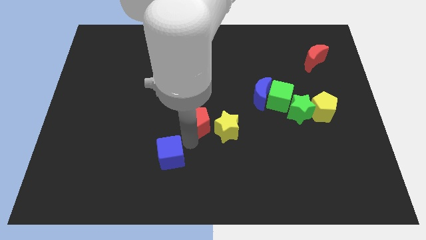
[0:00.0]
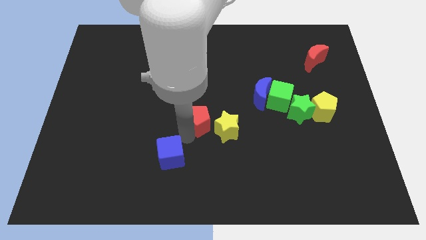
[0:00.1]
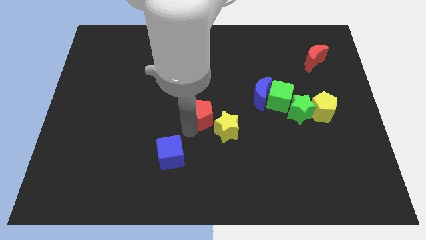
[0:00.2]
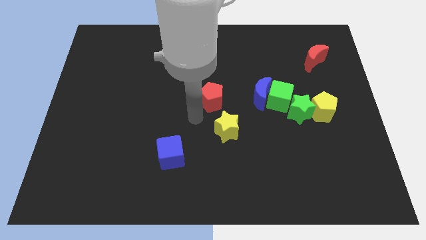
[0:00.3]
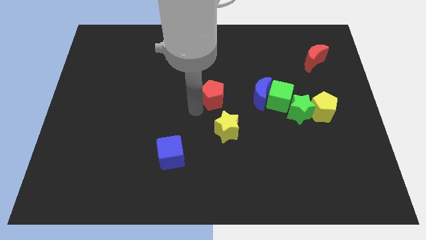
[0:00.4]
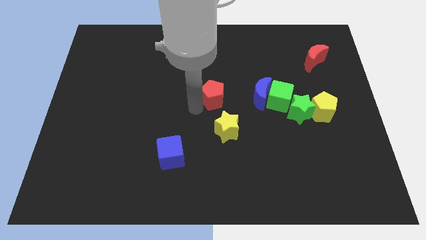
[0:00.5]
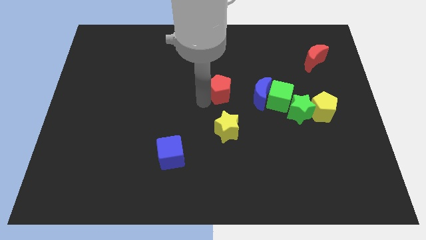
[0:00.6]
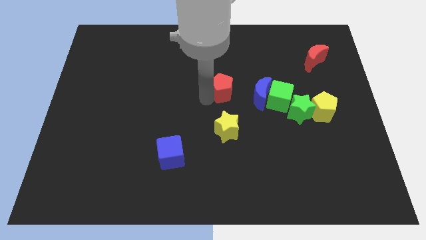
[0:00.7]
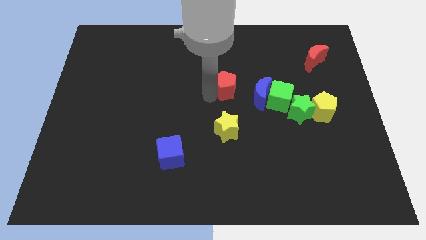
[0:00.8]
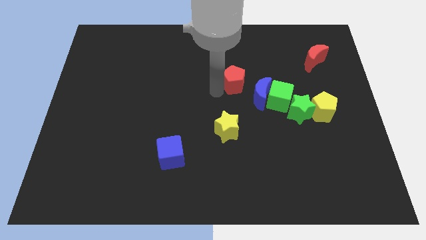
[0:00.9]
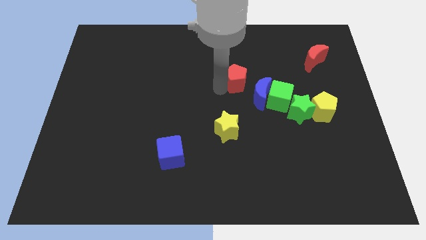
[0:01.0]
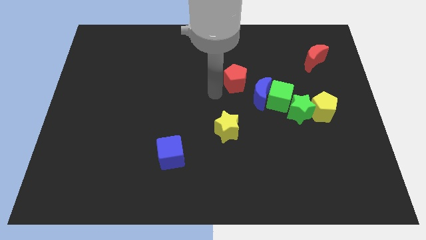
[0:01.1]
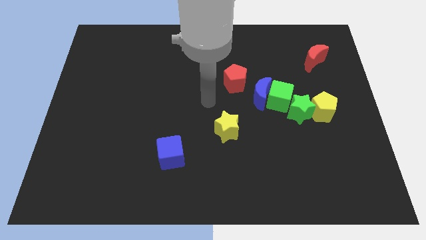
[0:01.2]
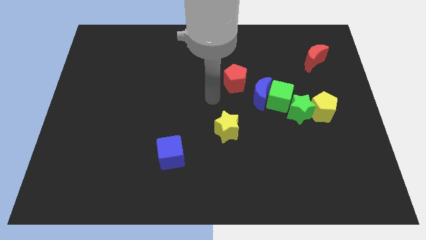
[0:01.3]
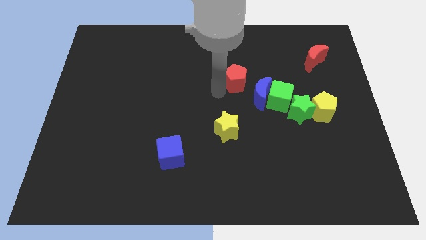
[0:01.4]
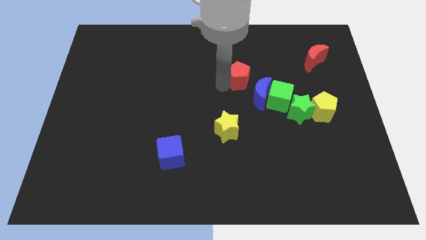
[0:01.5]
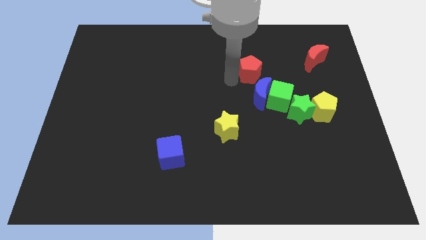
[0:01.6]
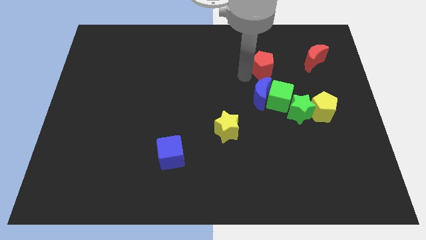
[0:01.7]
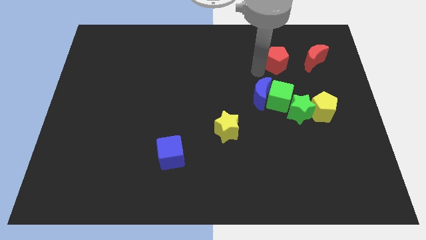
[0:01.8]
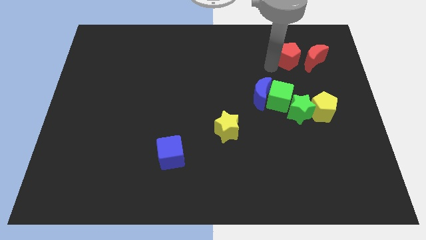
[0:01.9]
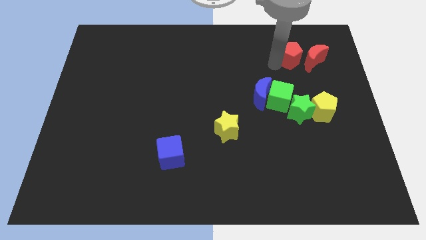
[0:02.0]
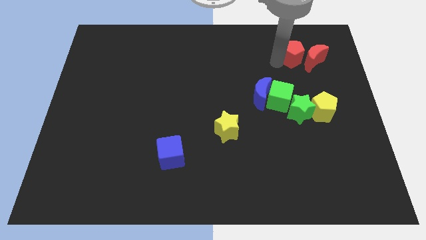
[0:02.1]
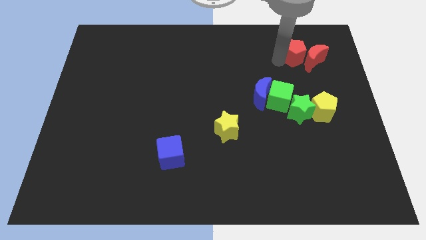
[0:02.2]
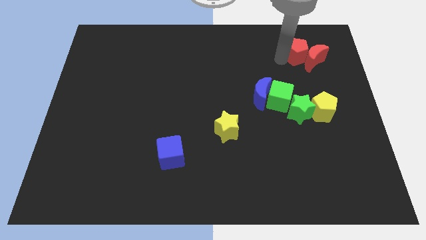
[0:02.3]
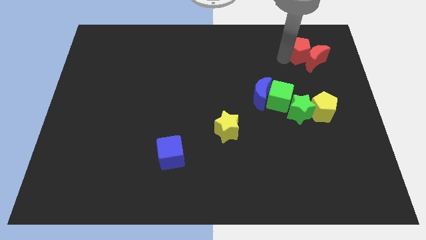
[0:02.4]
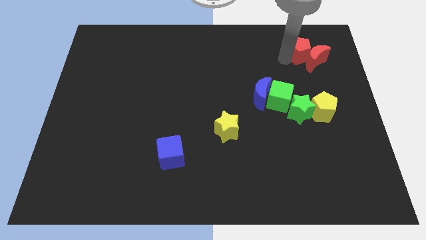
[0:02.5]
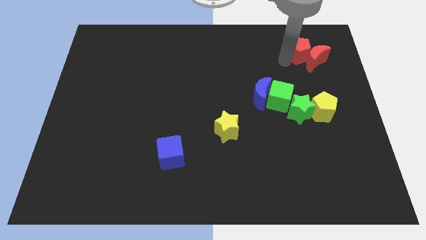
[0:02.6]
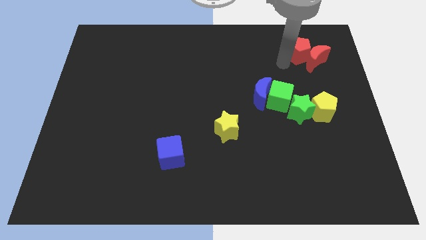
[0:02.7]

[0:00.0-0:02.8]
move the red pentagon into the red crescent

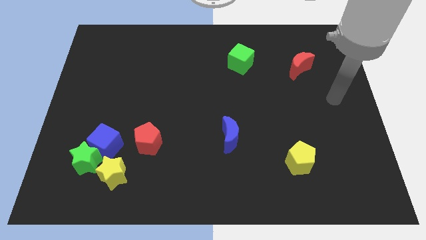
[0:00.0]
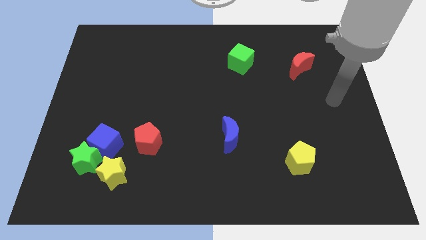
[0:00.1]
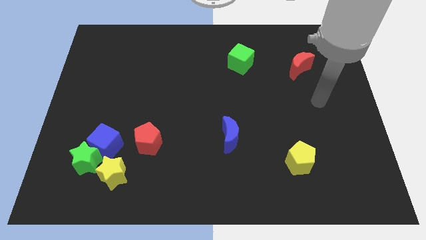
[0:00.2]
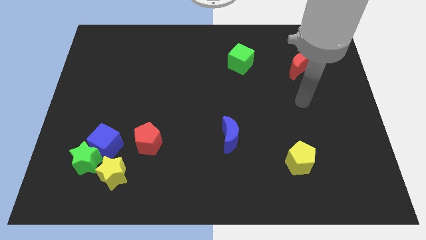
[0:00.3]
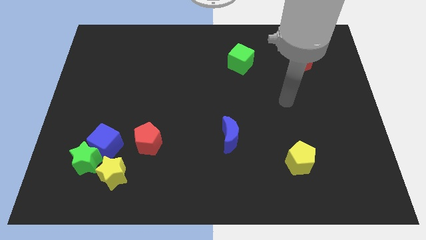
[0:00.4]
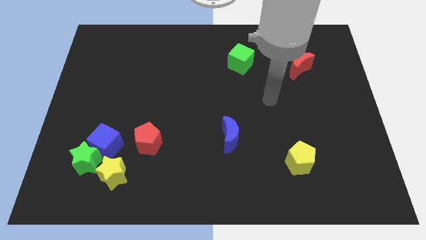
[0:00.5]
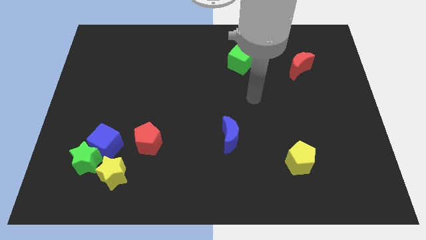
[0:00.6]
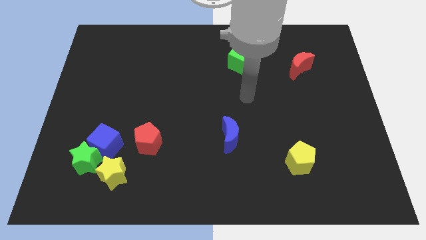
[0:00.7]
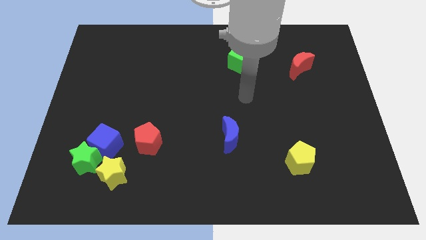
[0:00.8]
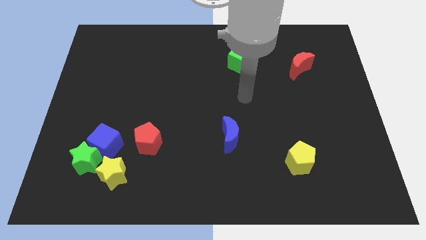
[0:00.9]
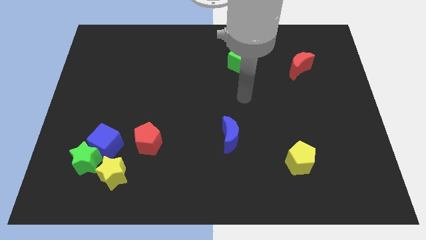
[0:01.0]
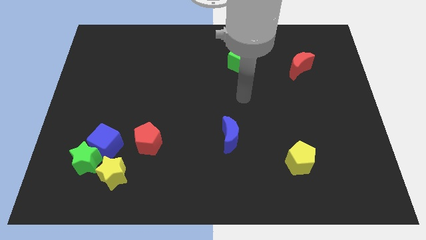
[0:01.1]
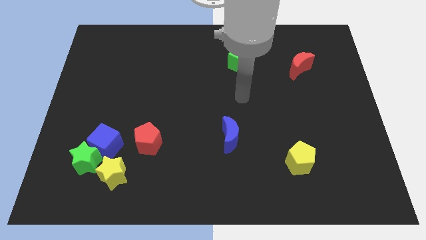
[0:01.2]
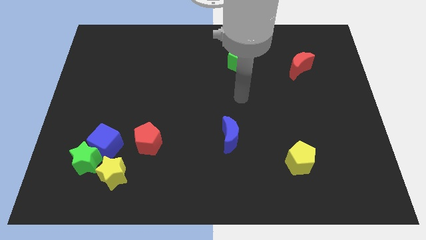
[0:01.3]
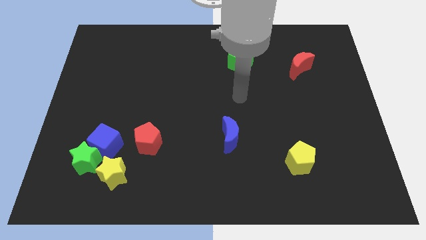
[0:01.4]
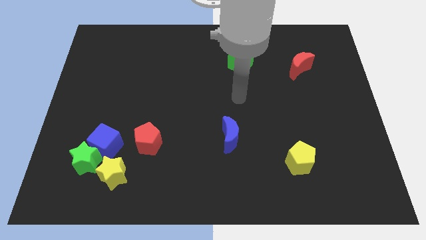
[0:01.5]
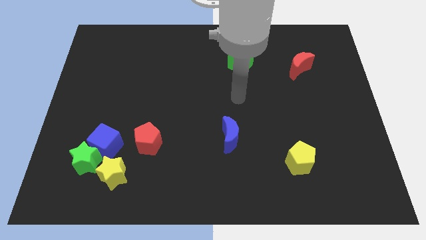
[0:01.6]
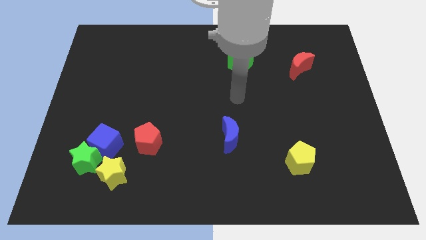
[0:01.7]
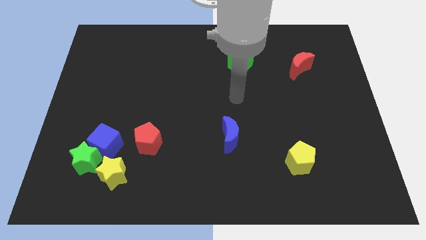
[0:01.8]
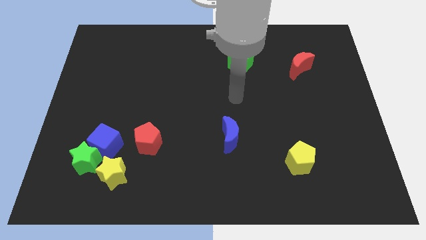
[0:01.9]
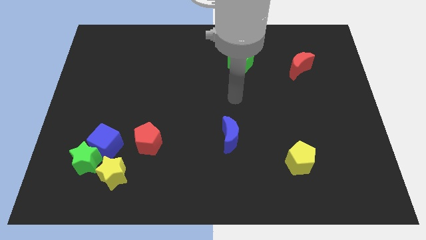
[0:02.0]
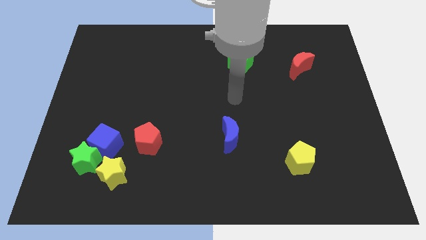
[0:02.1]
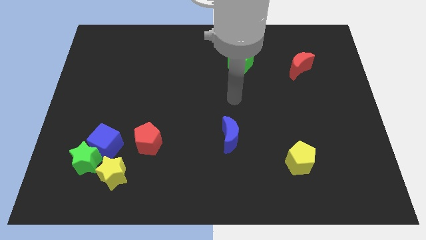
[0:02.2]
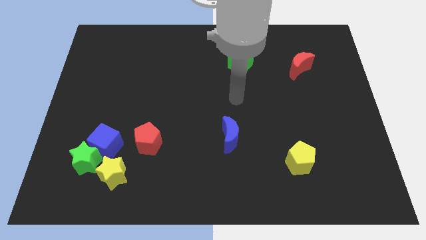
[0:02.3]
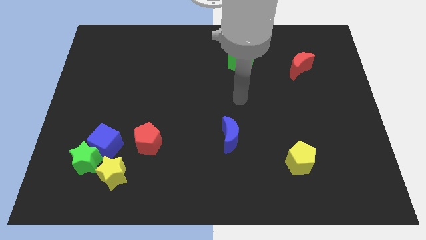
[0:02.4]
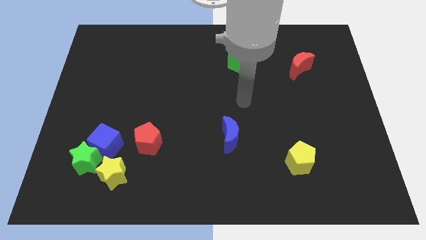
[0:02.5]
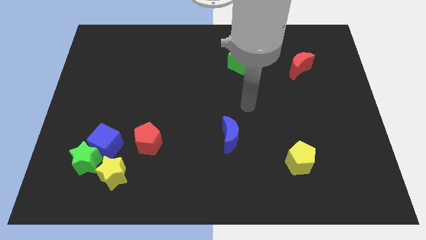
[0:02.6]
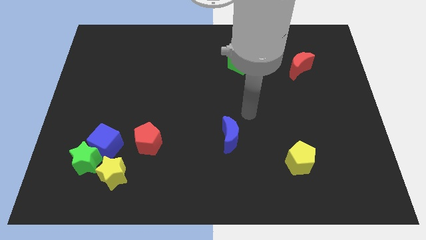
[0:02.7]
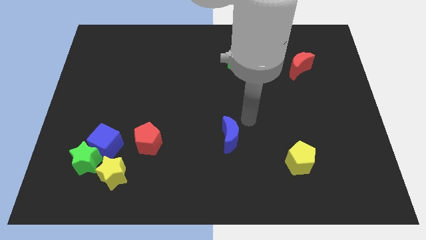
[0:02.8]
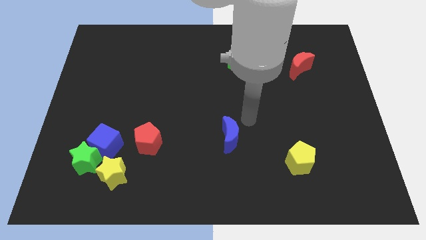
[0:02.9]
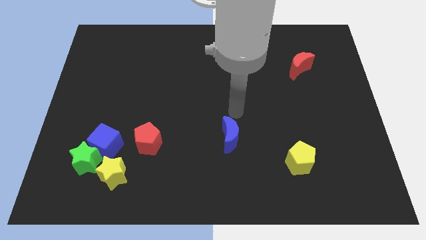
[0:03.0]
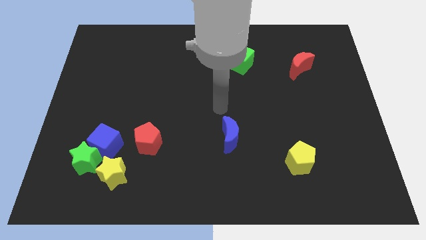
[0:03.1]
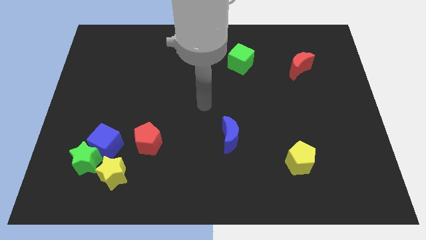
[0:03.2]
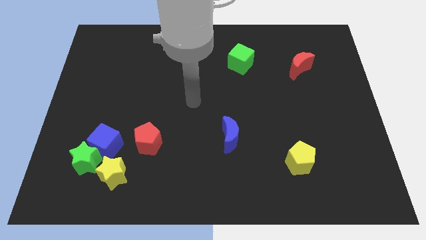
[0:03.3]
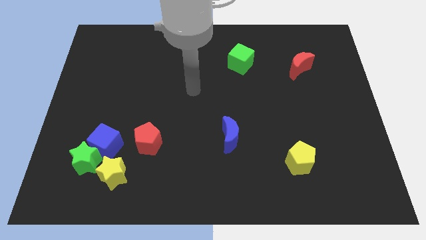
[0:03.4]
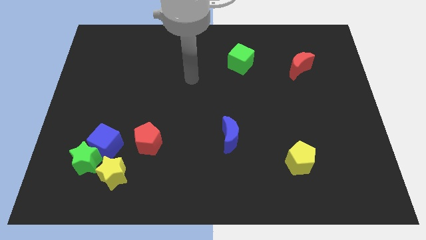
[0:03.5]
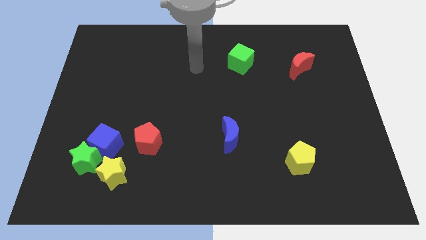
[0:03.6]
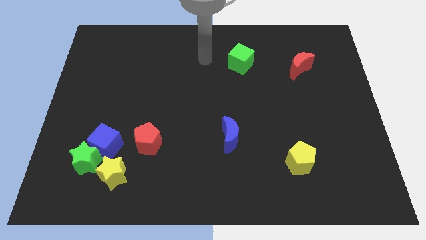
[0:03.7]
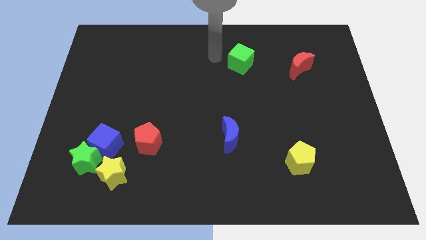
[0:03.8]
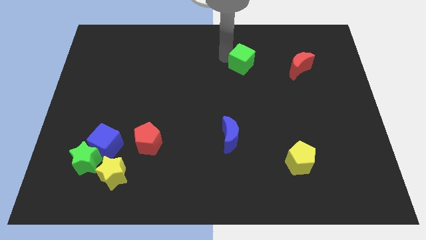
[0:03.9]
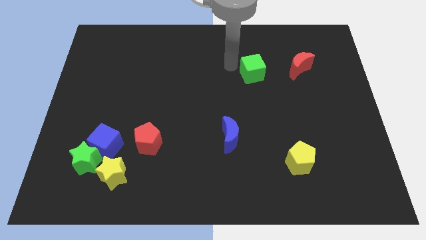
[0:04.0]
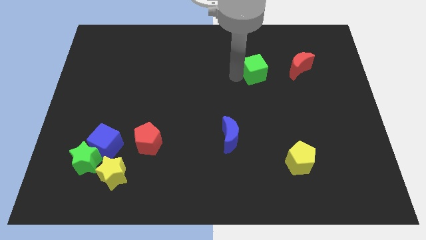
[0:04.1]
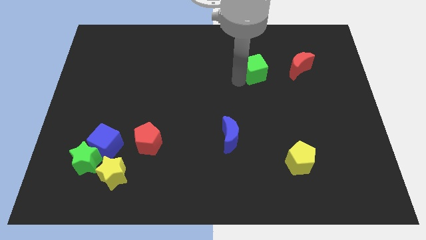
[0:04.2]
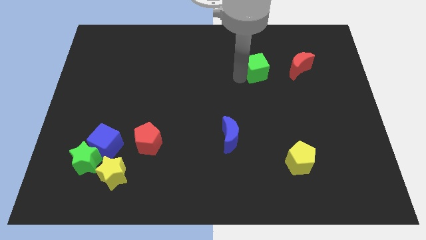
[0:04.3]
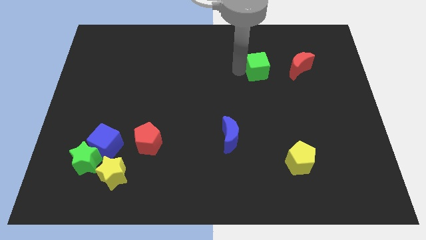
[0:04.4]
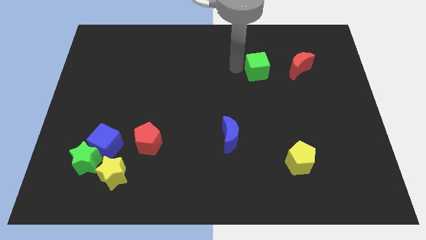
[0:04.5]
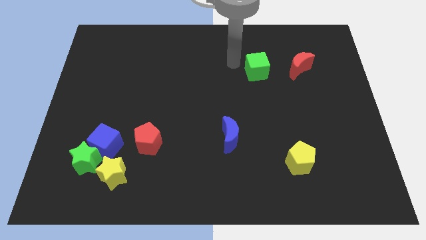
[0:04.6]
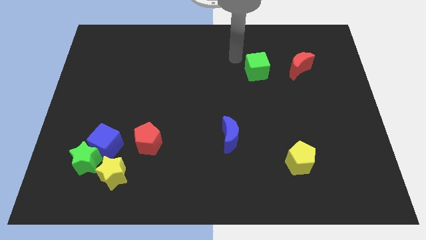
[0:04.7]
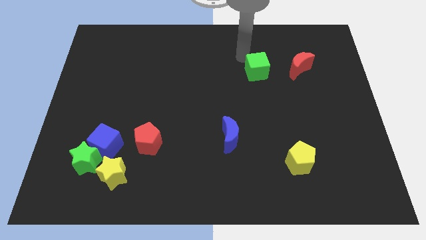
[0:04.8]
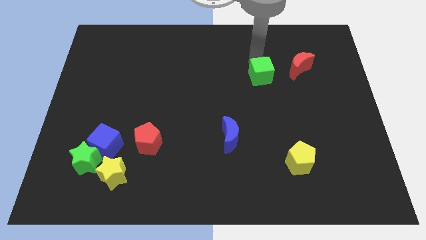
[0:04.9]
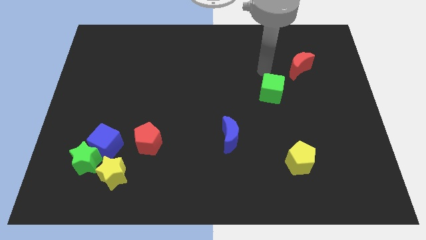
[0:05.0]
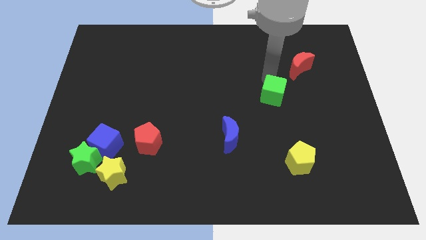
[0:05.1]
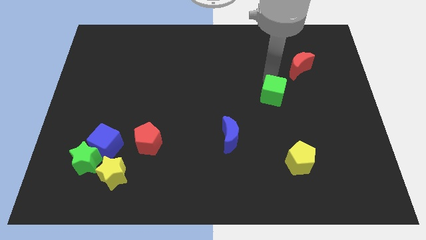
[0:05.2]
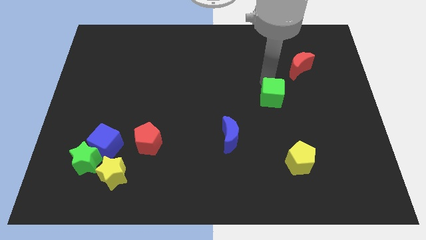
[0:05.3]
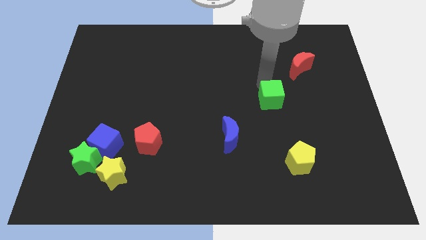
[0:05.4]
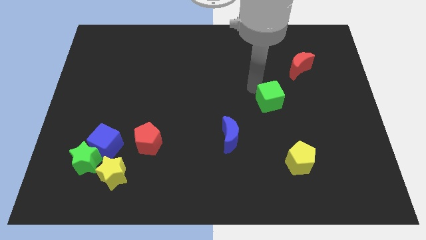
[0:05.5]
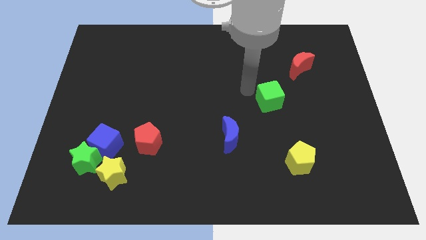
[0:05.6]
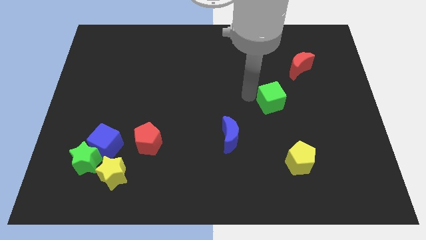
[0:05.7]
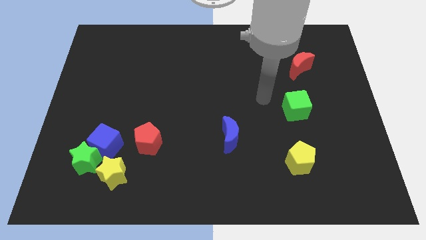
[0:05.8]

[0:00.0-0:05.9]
place the green cube in between the red crescent and yellow pentagon
